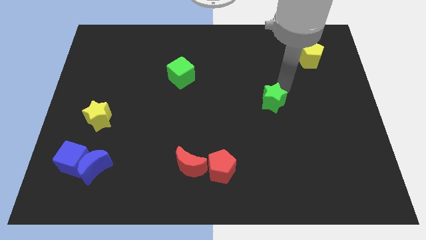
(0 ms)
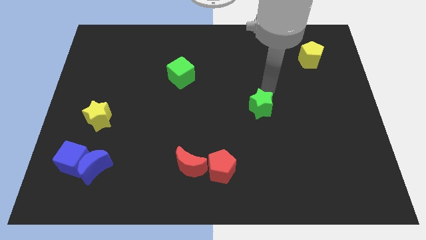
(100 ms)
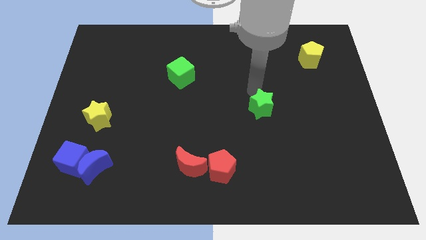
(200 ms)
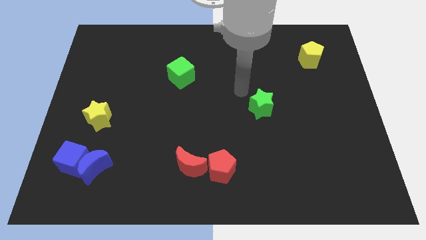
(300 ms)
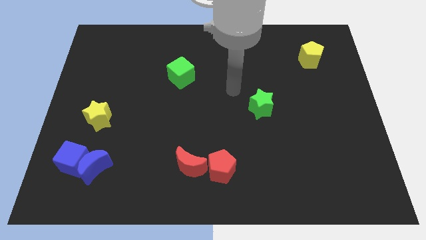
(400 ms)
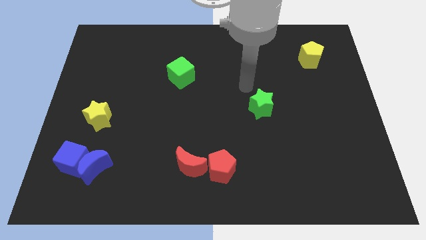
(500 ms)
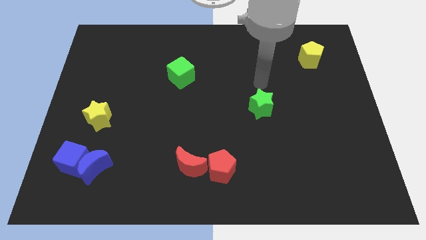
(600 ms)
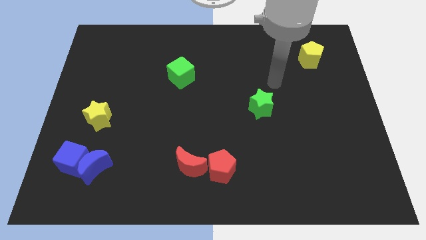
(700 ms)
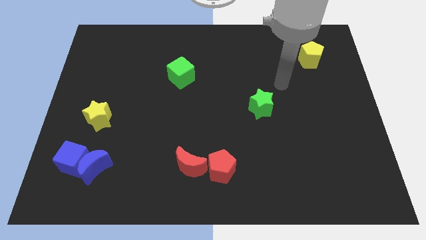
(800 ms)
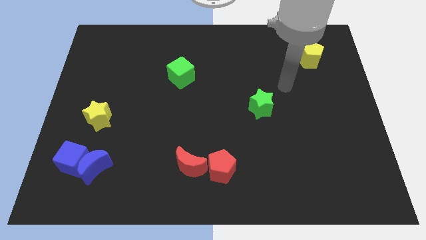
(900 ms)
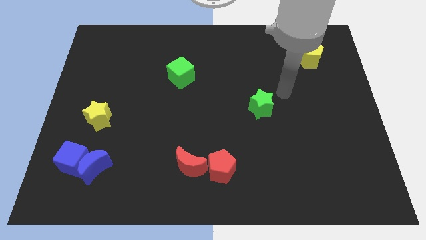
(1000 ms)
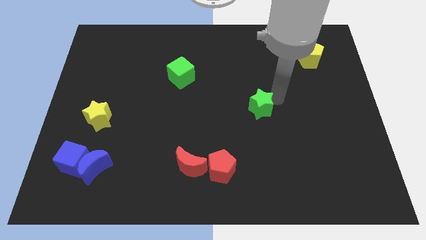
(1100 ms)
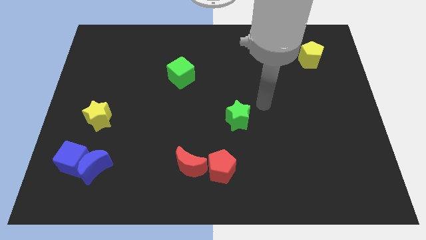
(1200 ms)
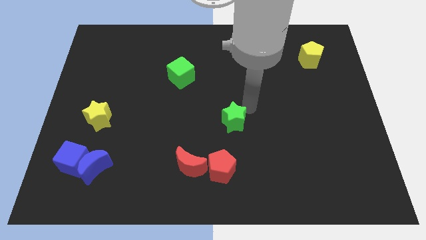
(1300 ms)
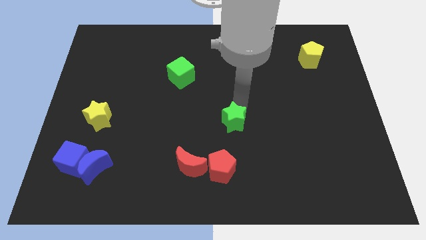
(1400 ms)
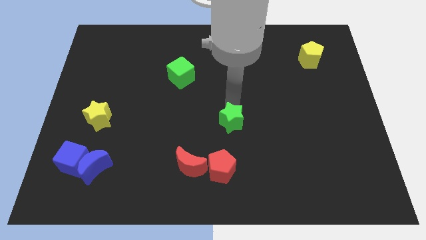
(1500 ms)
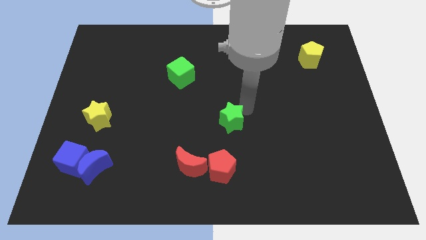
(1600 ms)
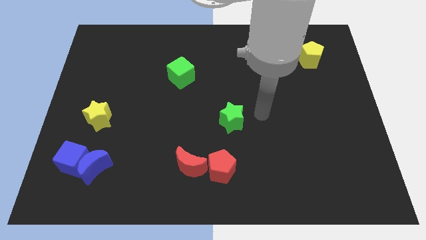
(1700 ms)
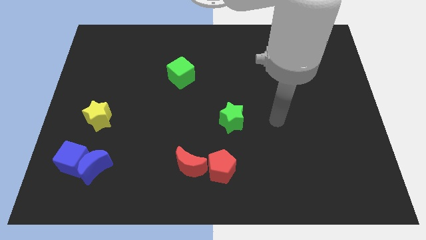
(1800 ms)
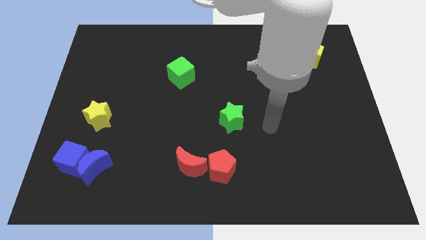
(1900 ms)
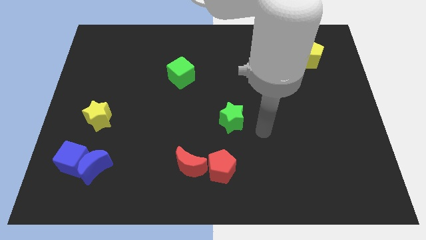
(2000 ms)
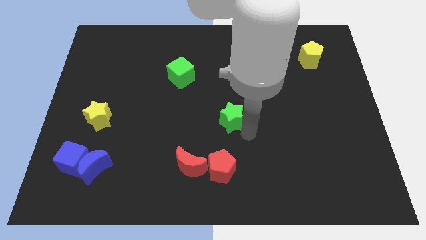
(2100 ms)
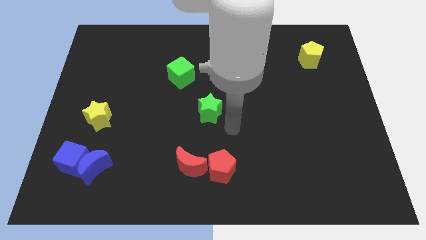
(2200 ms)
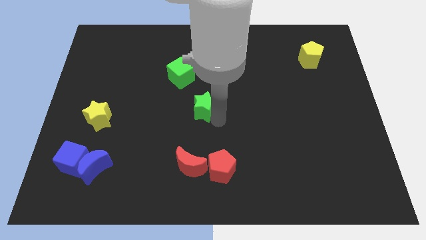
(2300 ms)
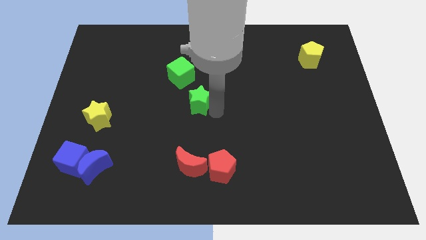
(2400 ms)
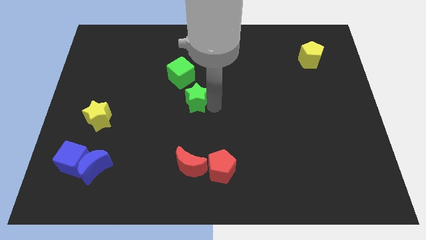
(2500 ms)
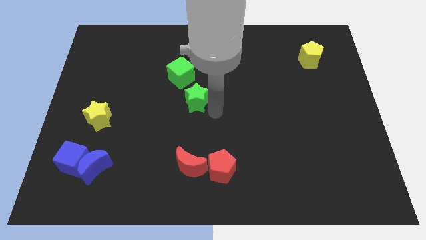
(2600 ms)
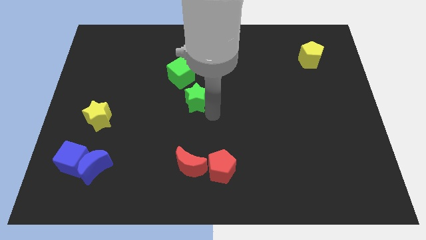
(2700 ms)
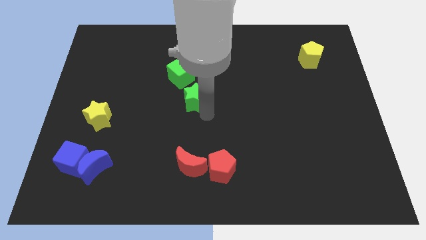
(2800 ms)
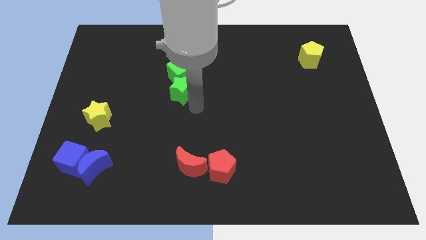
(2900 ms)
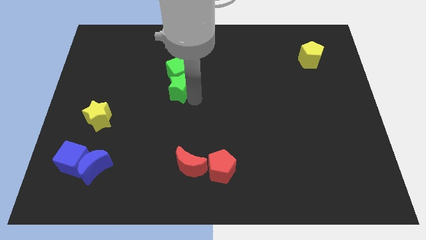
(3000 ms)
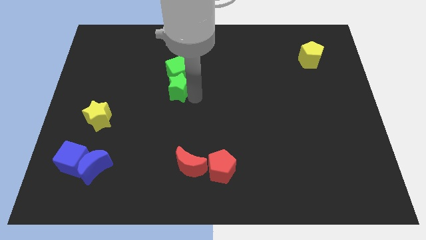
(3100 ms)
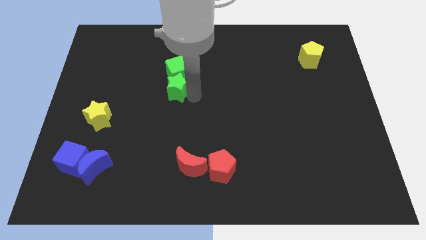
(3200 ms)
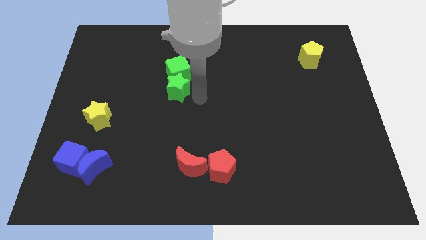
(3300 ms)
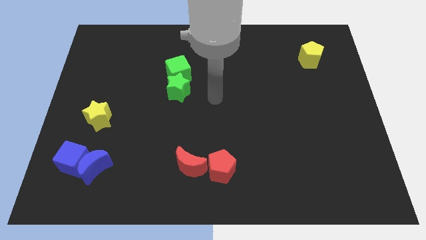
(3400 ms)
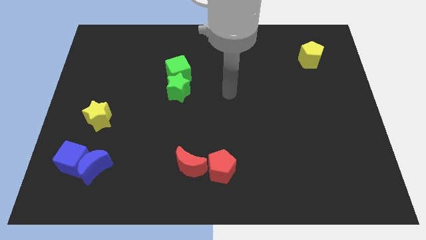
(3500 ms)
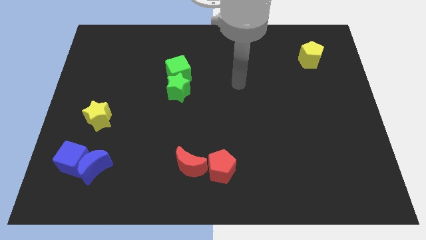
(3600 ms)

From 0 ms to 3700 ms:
move the green star to the bottom of the green cube

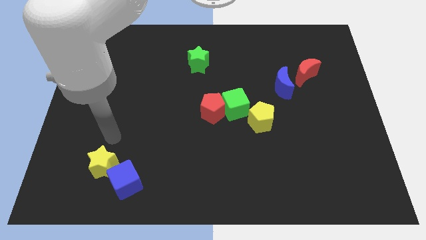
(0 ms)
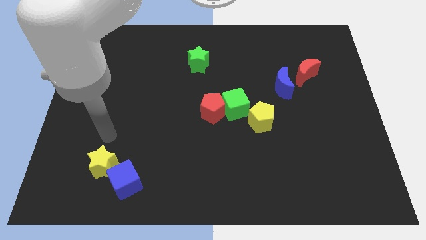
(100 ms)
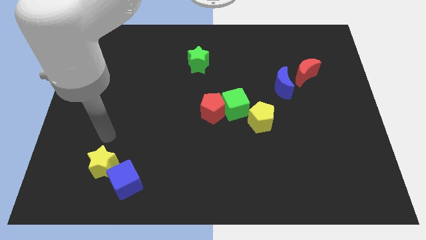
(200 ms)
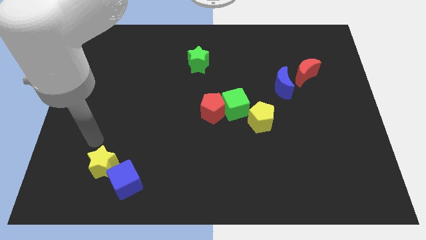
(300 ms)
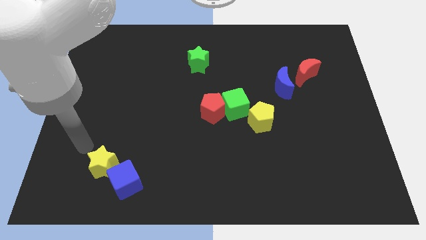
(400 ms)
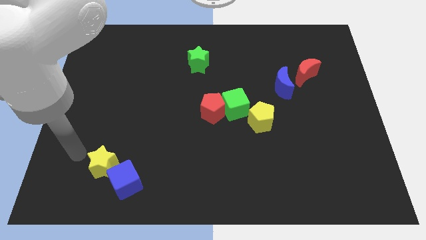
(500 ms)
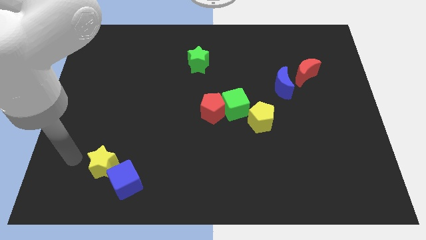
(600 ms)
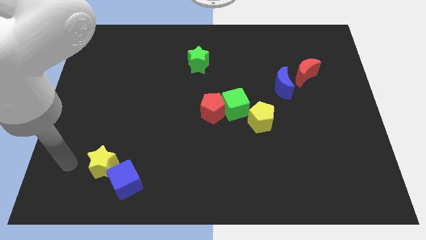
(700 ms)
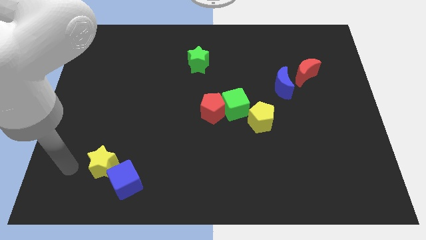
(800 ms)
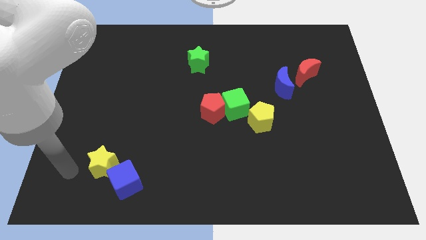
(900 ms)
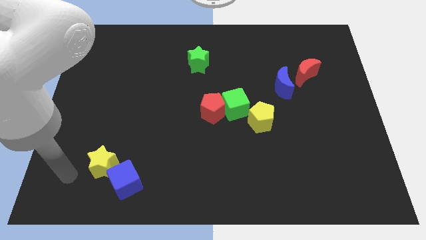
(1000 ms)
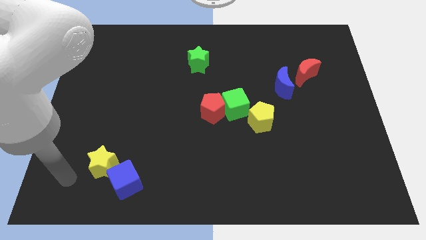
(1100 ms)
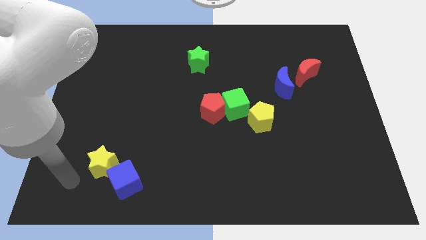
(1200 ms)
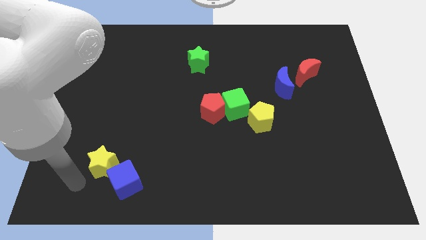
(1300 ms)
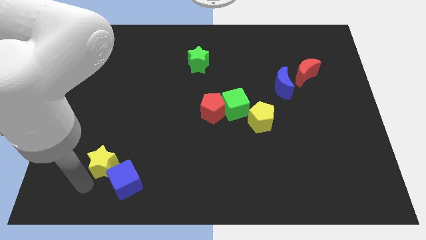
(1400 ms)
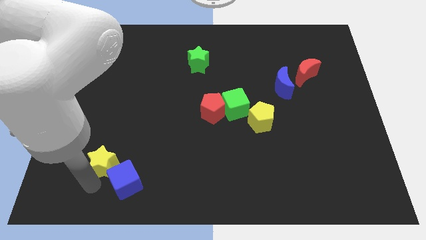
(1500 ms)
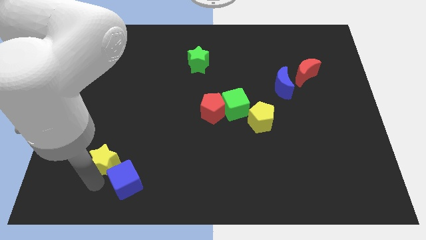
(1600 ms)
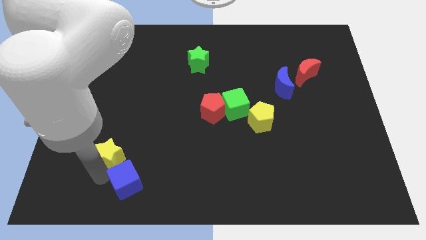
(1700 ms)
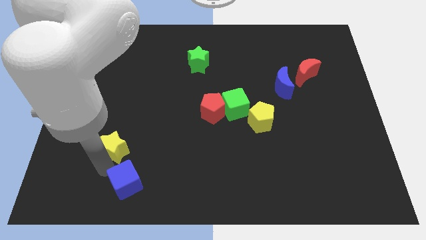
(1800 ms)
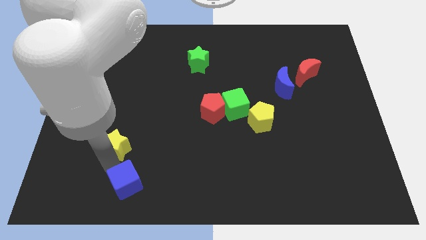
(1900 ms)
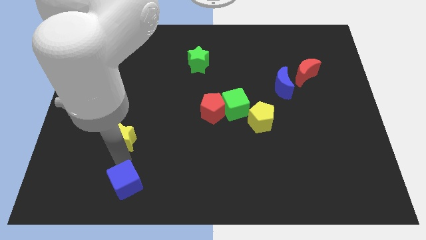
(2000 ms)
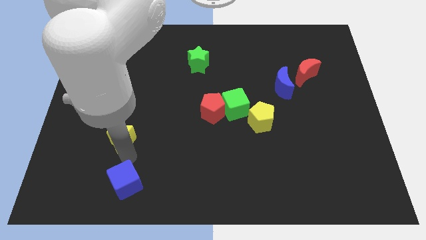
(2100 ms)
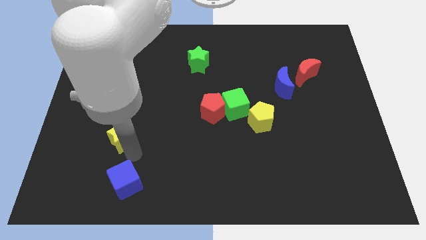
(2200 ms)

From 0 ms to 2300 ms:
separate the yellow star away from the blue cube

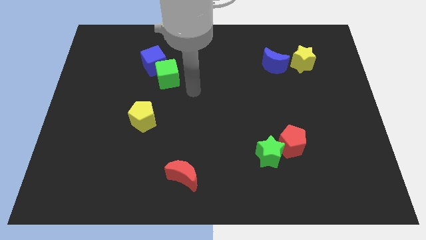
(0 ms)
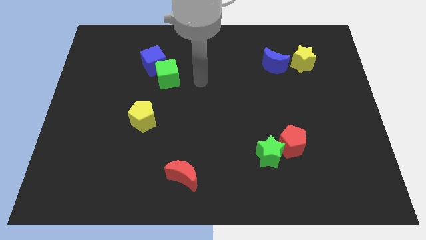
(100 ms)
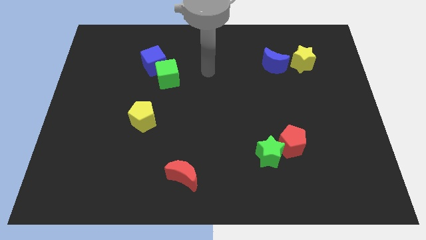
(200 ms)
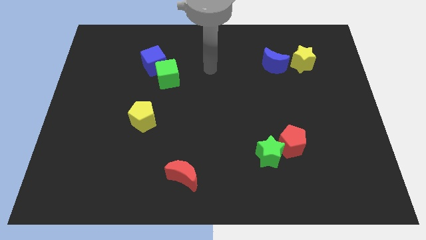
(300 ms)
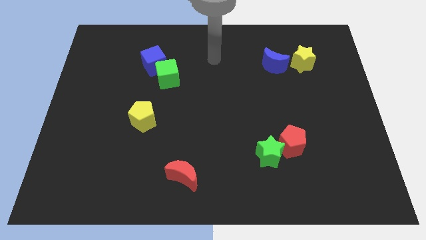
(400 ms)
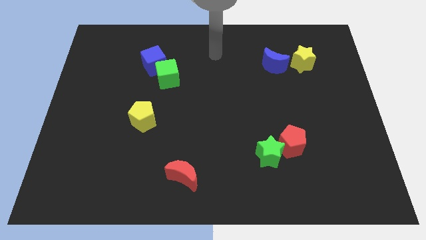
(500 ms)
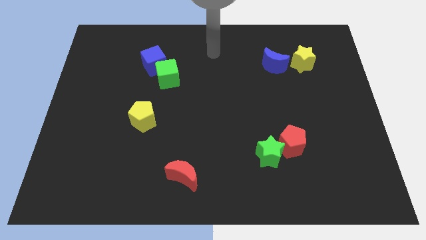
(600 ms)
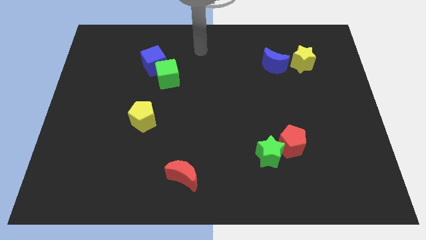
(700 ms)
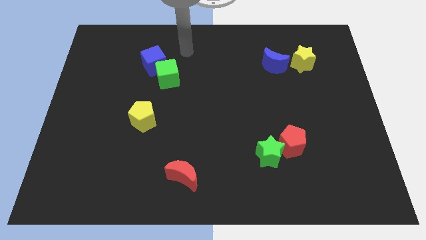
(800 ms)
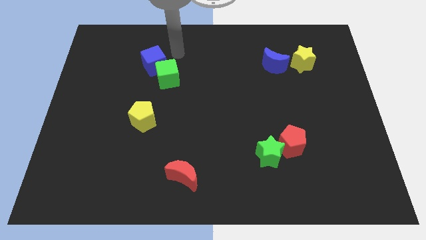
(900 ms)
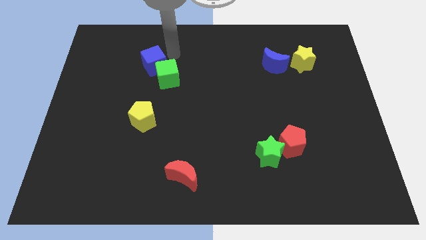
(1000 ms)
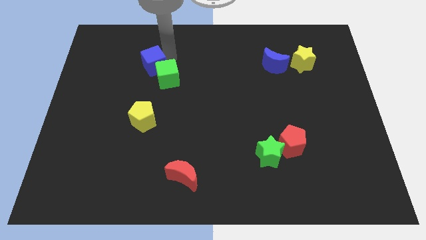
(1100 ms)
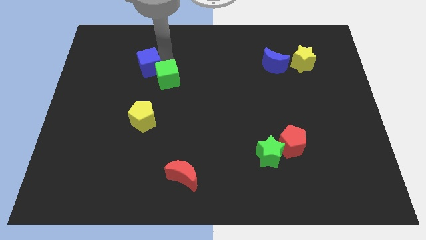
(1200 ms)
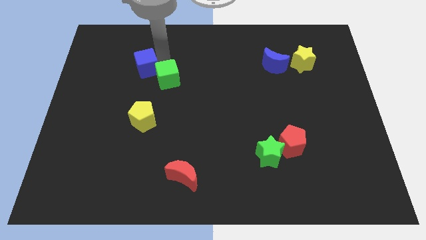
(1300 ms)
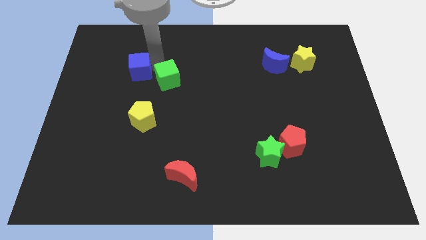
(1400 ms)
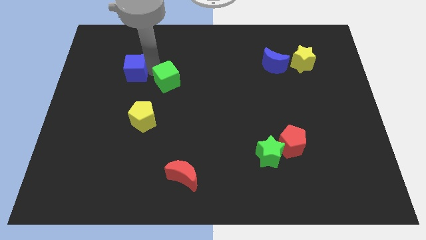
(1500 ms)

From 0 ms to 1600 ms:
slightly push the blue cube

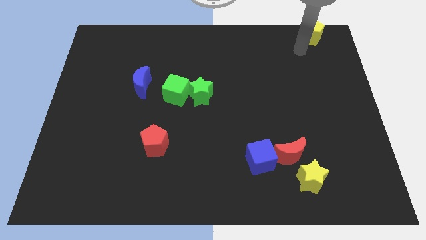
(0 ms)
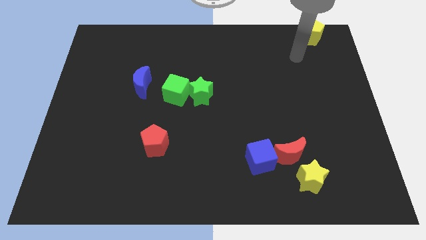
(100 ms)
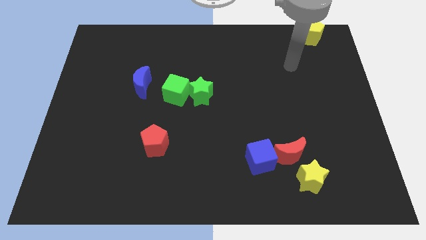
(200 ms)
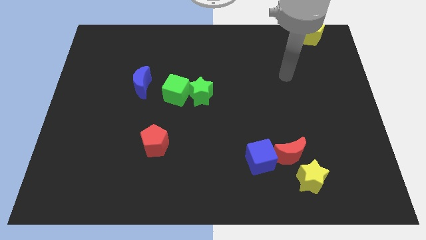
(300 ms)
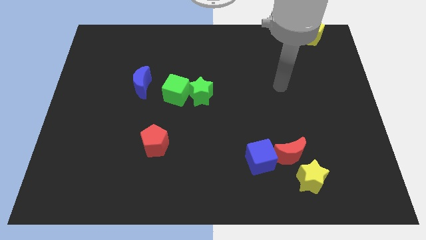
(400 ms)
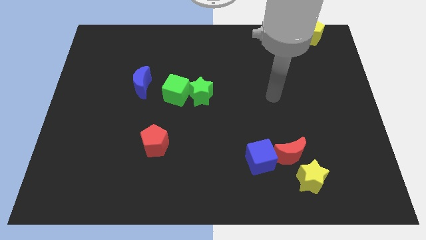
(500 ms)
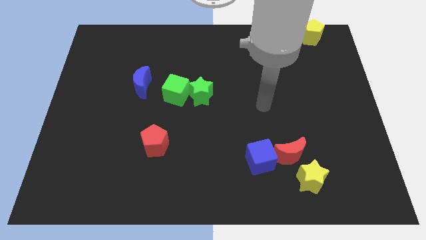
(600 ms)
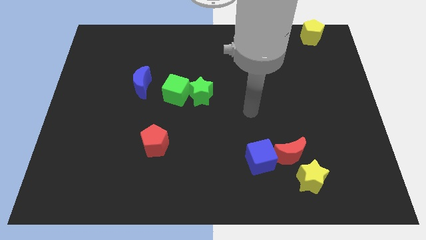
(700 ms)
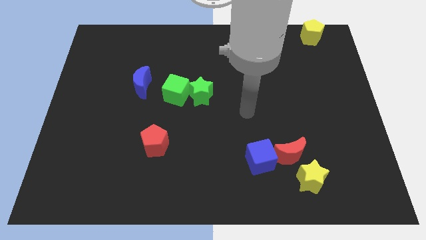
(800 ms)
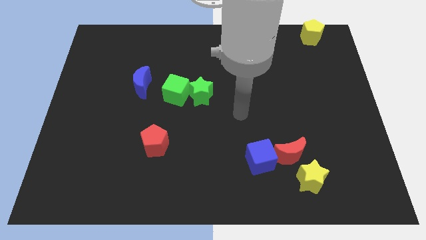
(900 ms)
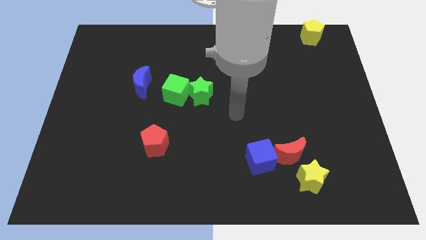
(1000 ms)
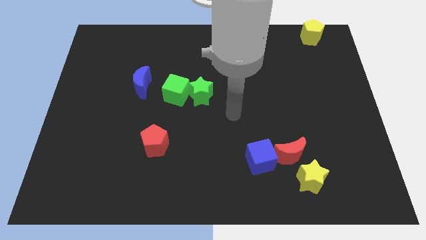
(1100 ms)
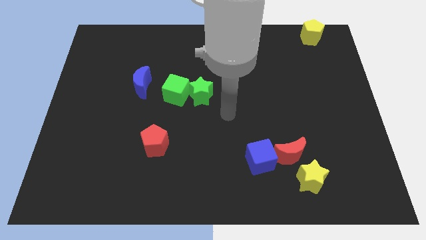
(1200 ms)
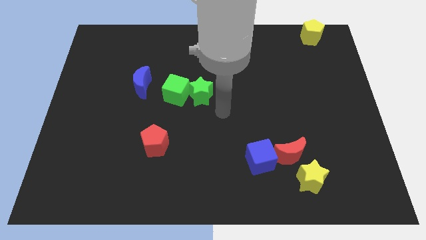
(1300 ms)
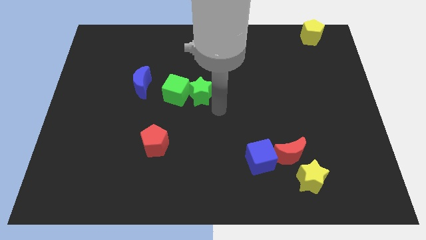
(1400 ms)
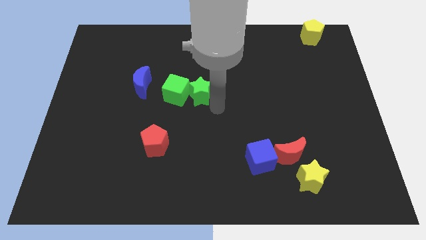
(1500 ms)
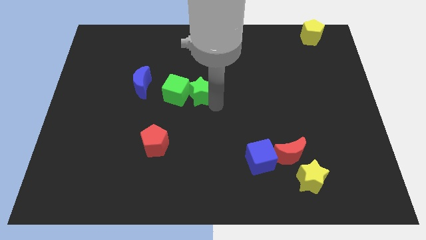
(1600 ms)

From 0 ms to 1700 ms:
move your arm to the bottom of green star
